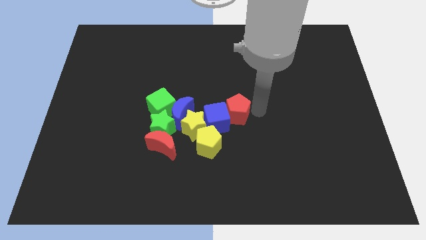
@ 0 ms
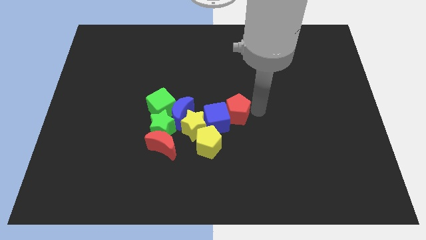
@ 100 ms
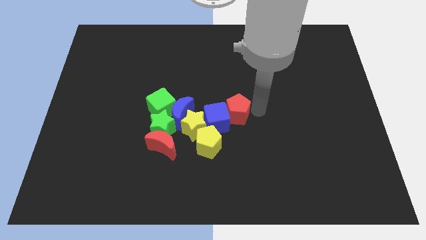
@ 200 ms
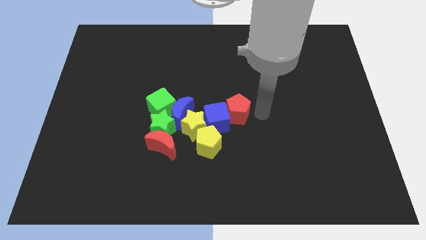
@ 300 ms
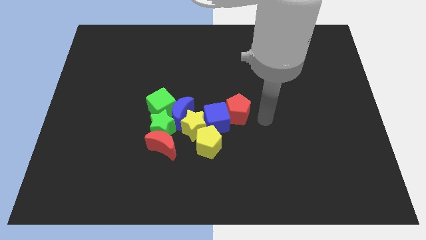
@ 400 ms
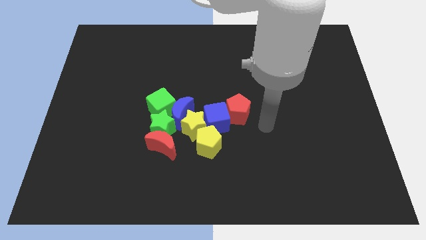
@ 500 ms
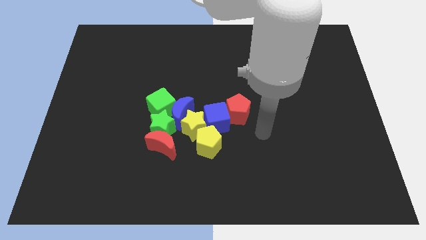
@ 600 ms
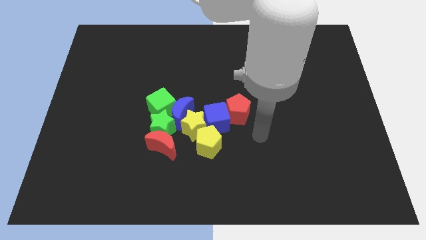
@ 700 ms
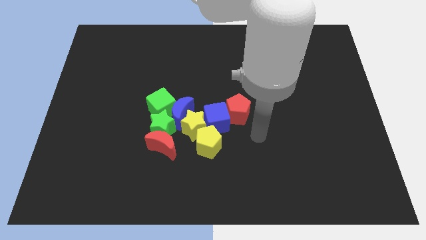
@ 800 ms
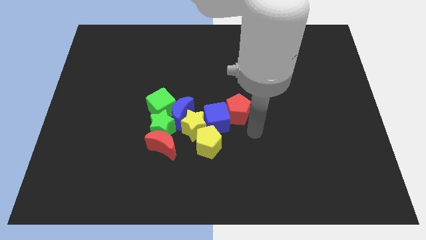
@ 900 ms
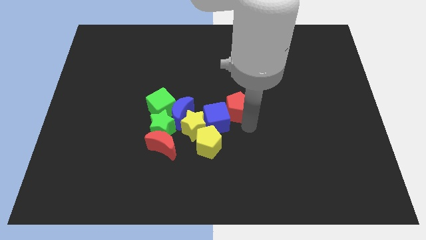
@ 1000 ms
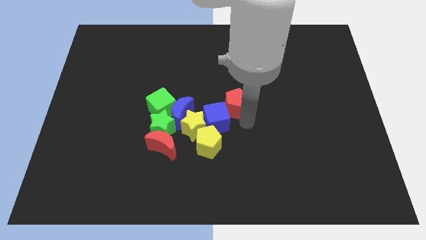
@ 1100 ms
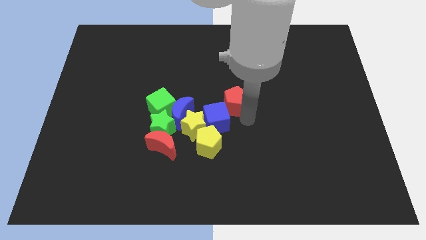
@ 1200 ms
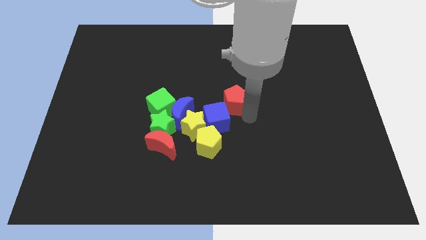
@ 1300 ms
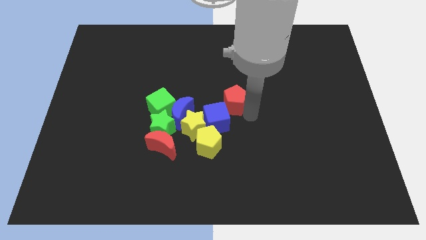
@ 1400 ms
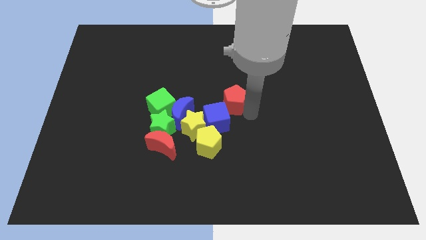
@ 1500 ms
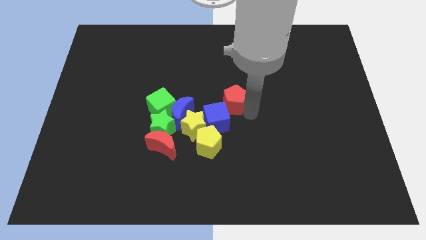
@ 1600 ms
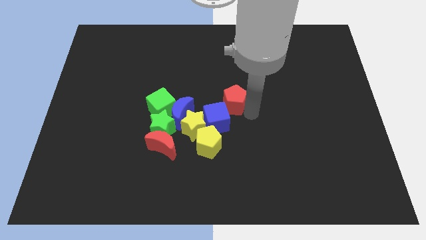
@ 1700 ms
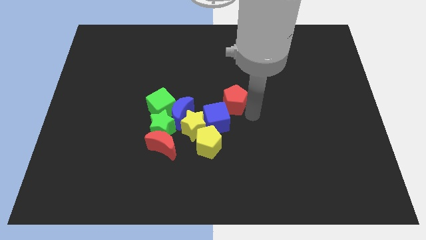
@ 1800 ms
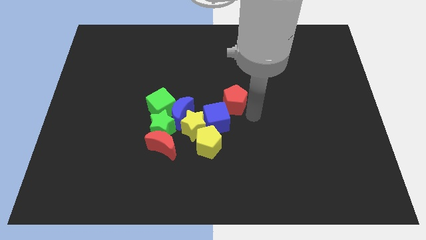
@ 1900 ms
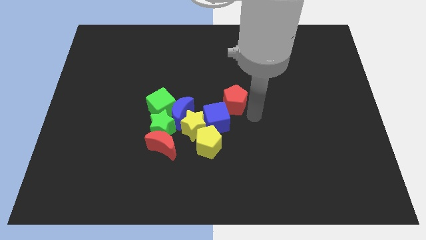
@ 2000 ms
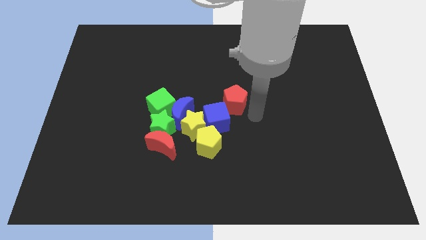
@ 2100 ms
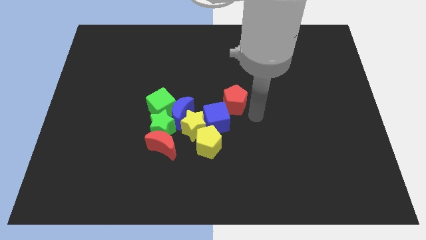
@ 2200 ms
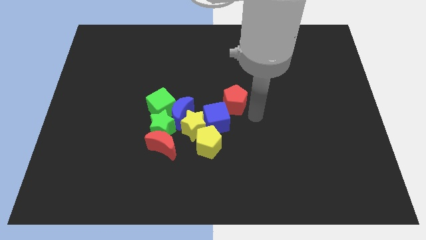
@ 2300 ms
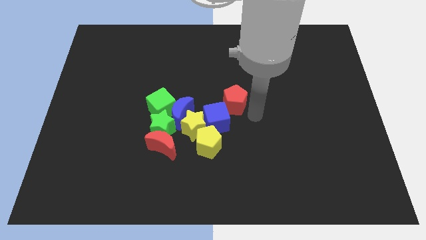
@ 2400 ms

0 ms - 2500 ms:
move the red pentagon to the center of the board

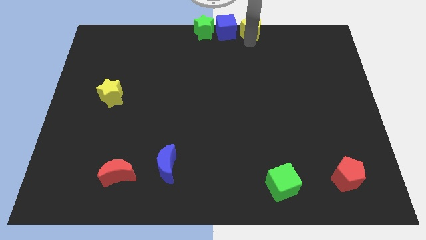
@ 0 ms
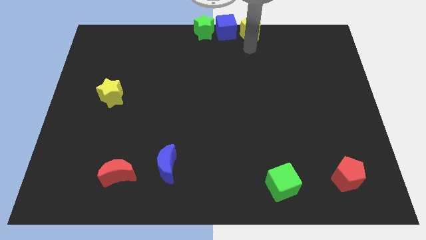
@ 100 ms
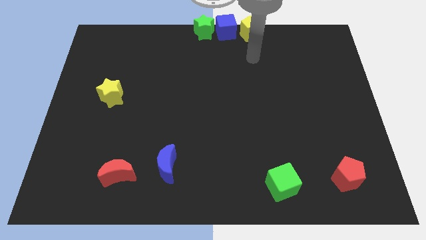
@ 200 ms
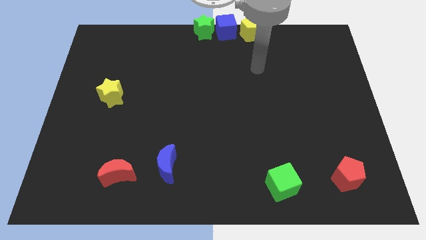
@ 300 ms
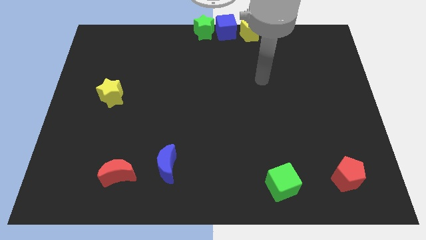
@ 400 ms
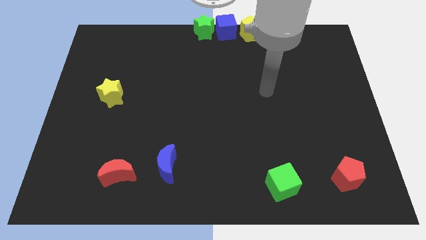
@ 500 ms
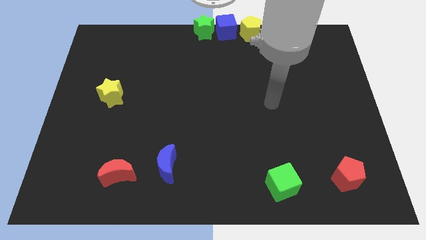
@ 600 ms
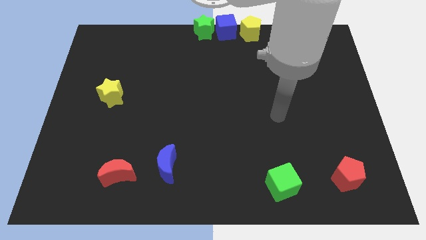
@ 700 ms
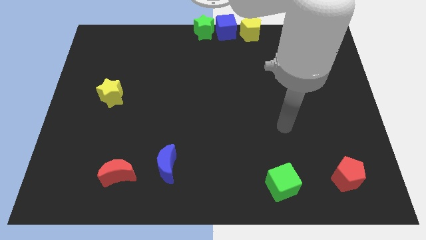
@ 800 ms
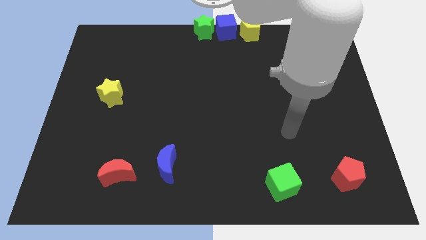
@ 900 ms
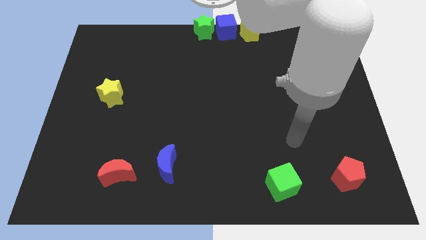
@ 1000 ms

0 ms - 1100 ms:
move your arm away from the yellow pentagon

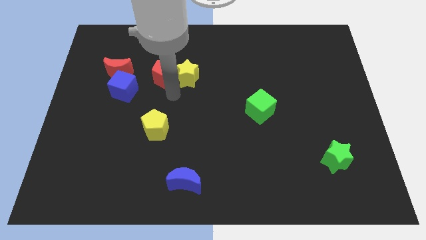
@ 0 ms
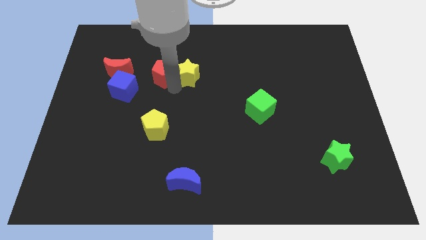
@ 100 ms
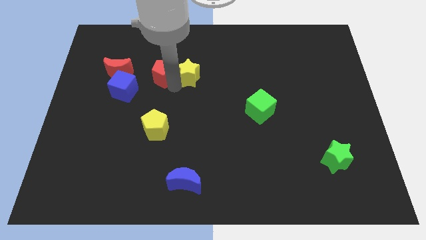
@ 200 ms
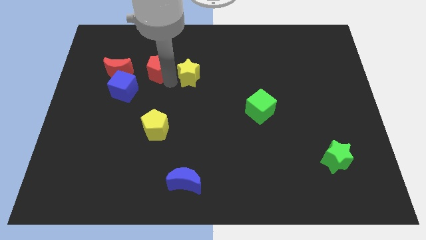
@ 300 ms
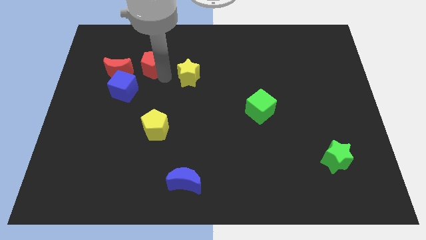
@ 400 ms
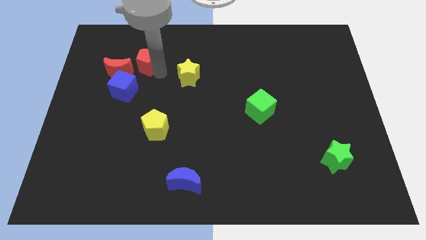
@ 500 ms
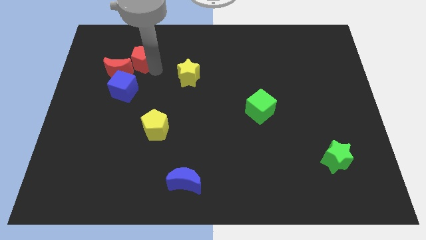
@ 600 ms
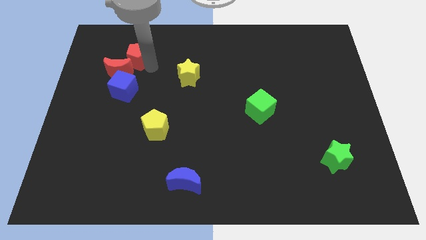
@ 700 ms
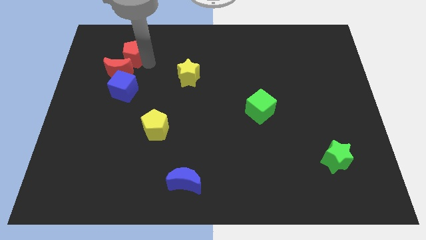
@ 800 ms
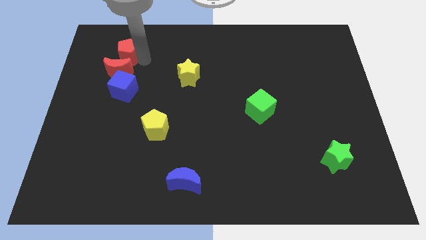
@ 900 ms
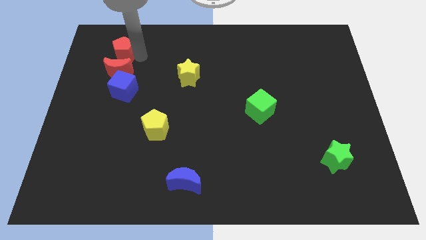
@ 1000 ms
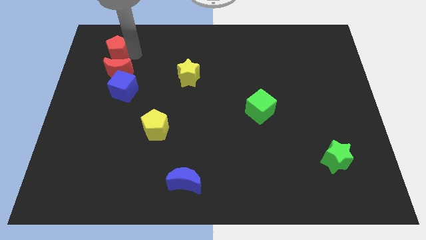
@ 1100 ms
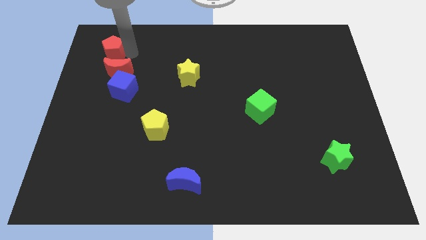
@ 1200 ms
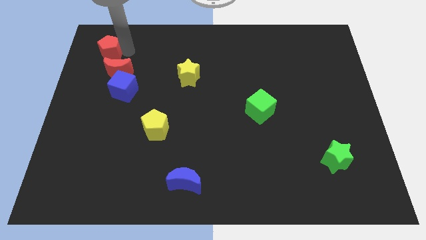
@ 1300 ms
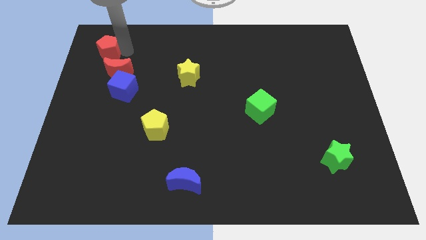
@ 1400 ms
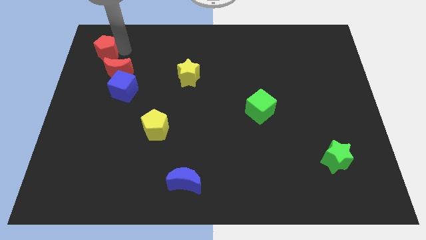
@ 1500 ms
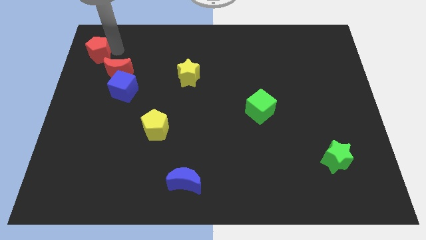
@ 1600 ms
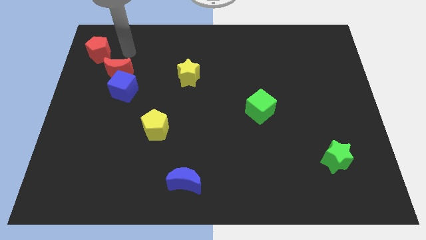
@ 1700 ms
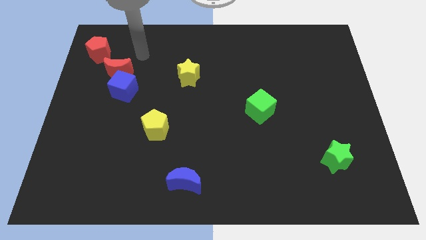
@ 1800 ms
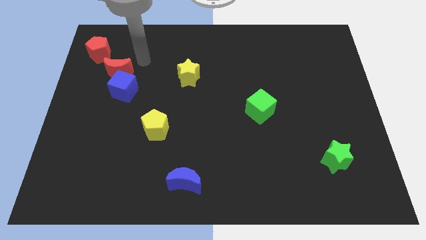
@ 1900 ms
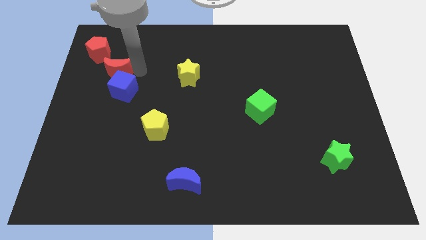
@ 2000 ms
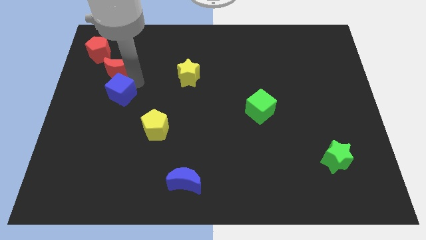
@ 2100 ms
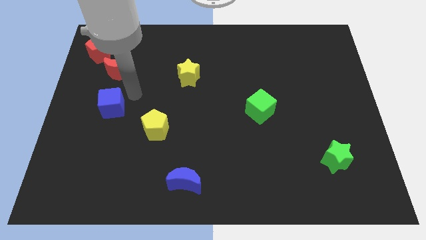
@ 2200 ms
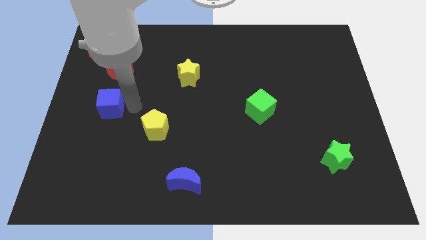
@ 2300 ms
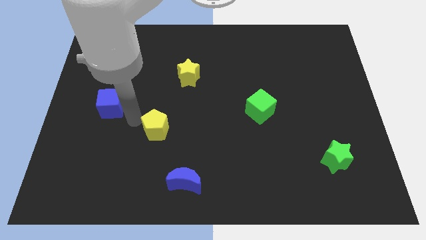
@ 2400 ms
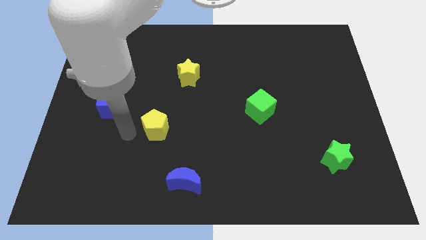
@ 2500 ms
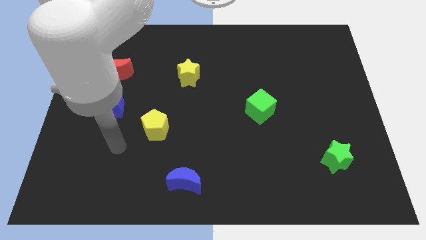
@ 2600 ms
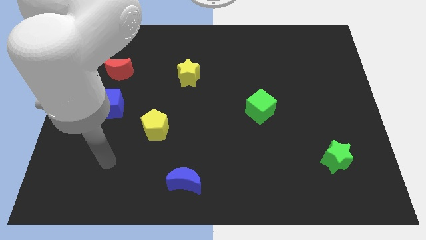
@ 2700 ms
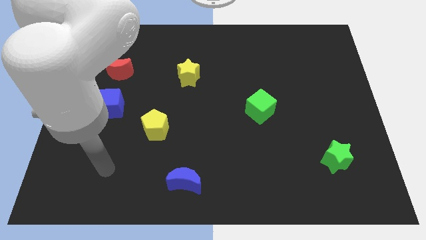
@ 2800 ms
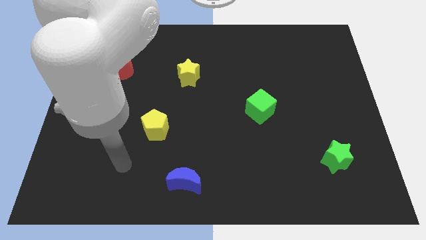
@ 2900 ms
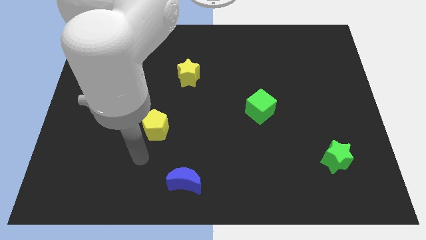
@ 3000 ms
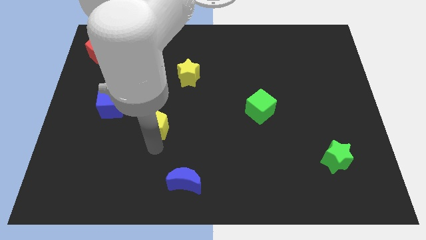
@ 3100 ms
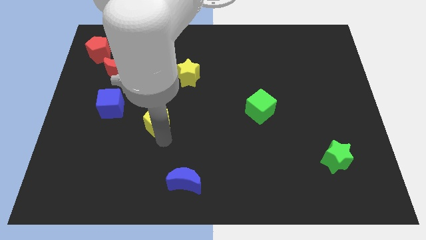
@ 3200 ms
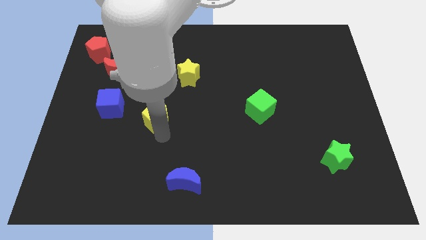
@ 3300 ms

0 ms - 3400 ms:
push the red pentagon to the left

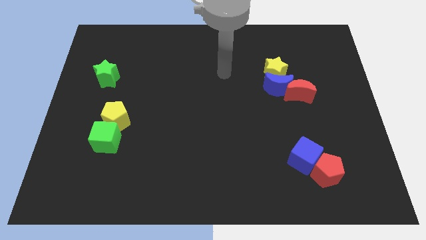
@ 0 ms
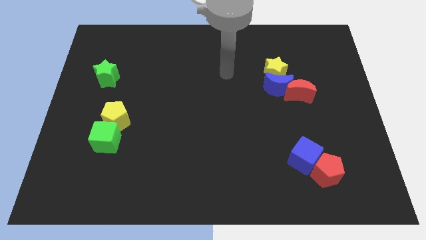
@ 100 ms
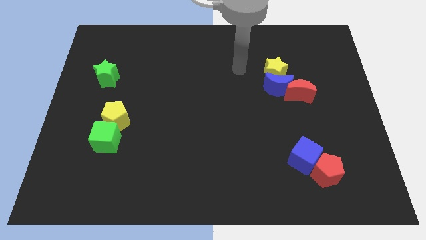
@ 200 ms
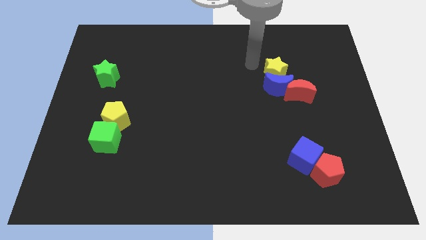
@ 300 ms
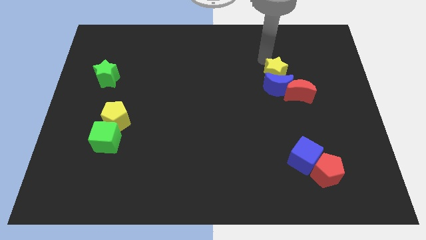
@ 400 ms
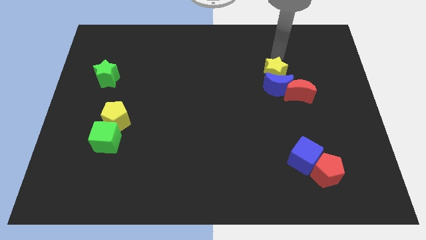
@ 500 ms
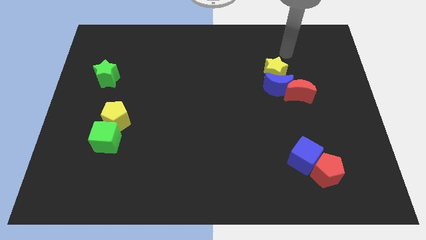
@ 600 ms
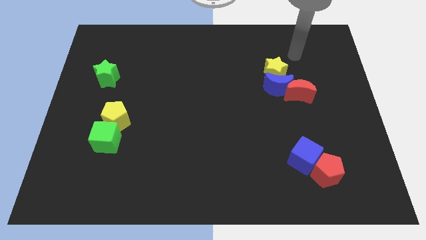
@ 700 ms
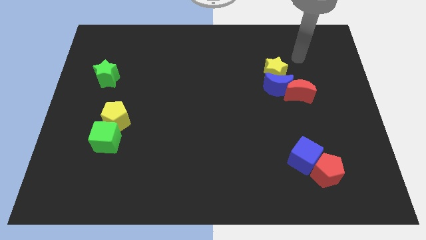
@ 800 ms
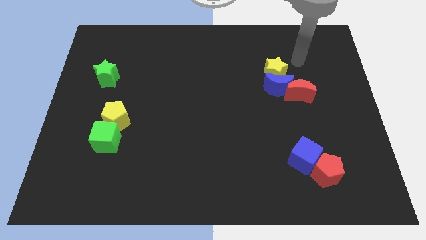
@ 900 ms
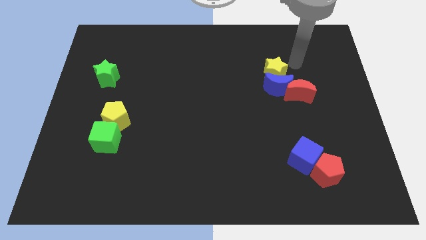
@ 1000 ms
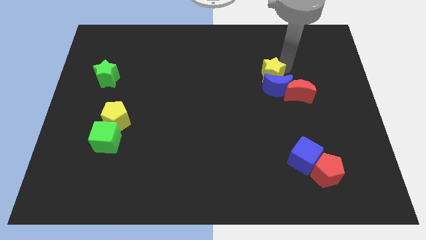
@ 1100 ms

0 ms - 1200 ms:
point your arm to the right side of yellow star

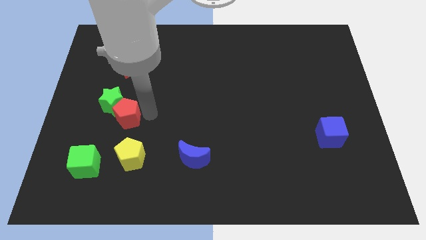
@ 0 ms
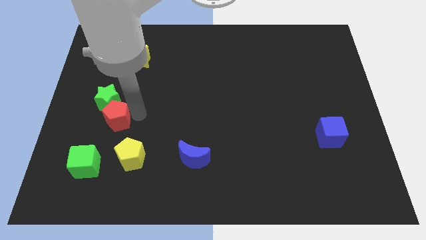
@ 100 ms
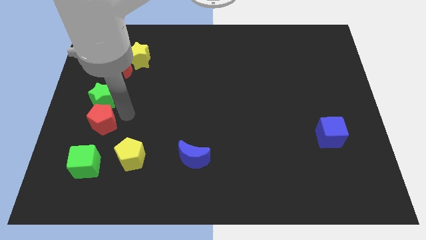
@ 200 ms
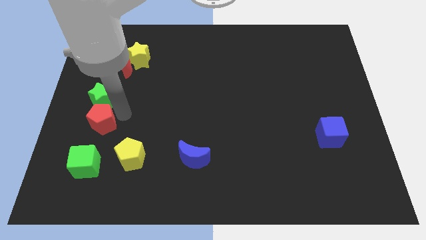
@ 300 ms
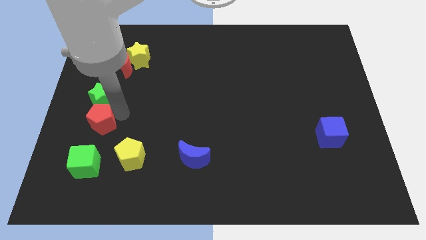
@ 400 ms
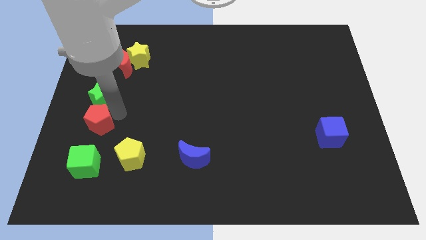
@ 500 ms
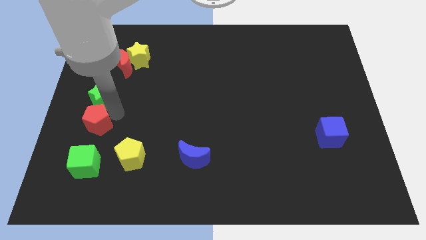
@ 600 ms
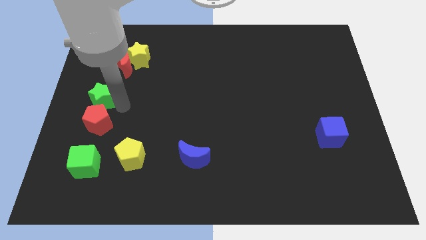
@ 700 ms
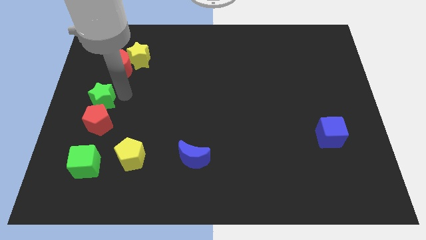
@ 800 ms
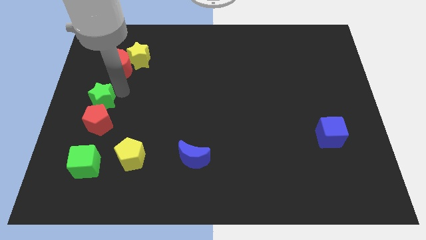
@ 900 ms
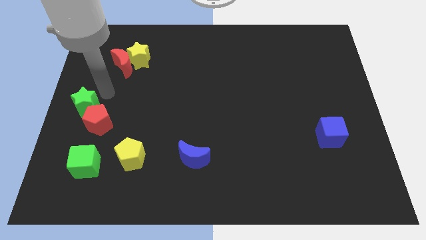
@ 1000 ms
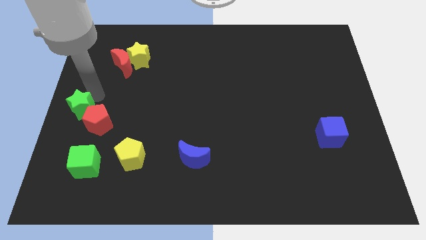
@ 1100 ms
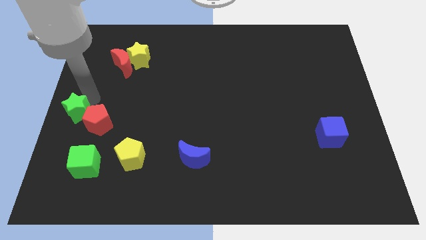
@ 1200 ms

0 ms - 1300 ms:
push the red crescent towards the bottom right corner of the green star
